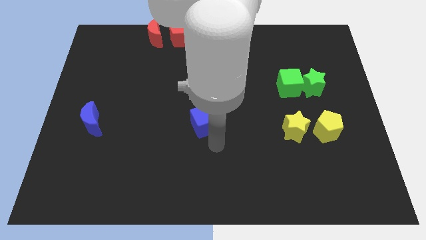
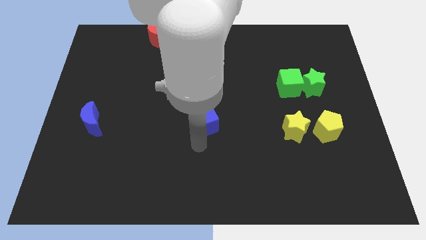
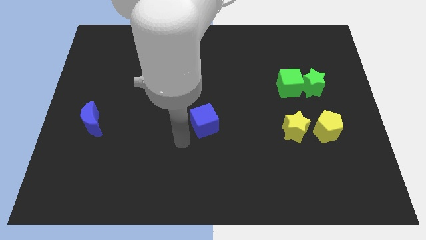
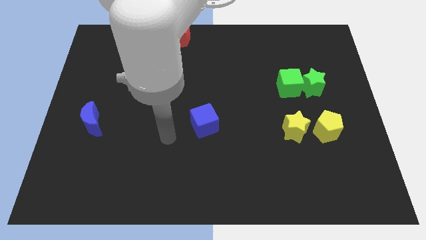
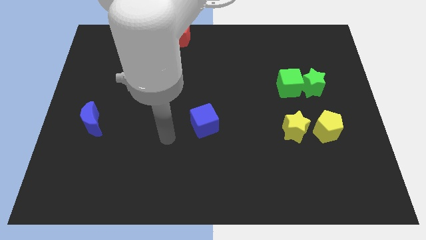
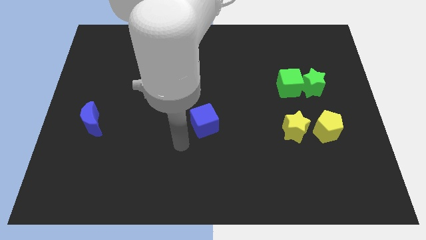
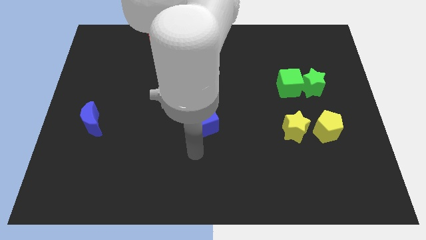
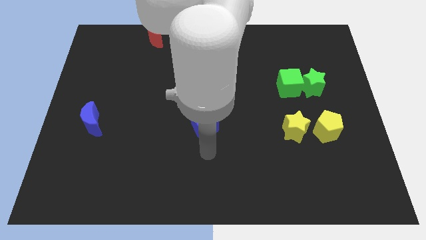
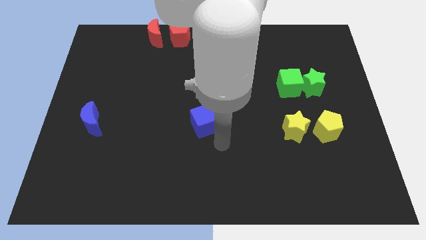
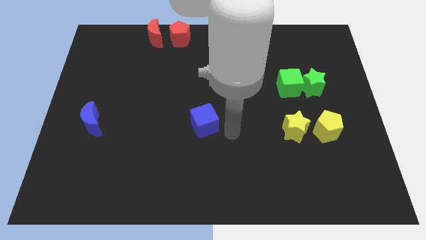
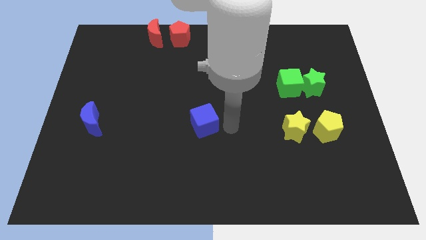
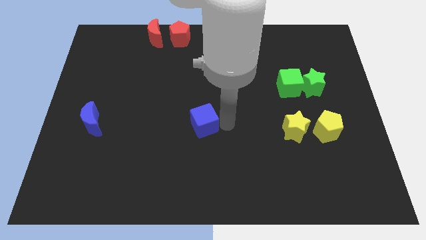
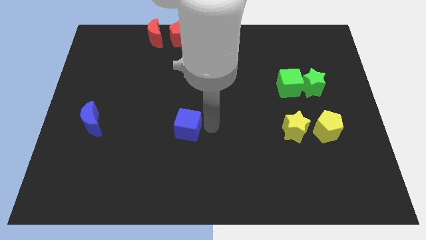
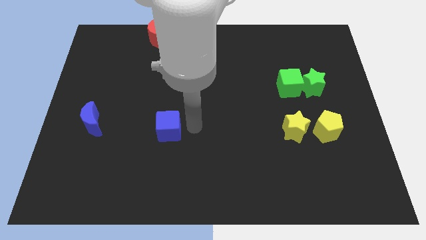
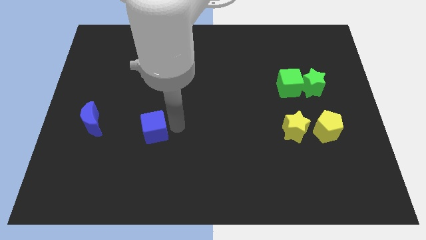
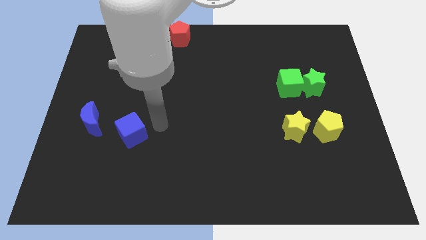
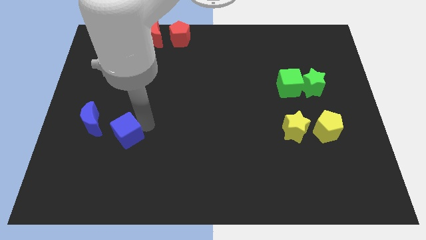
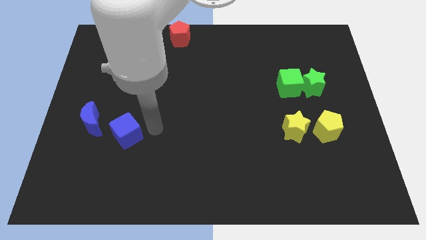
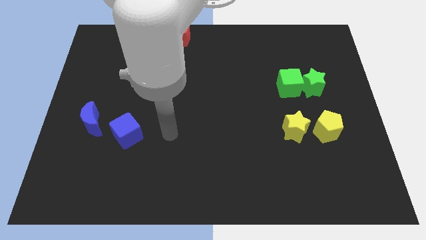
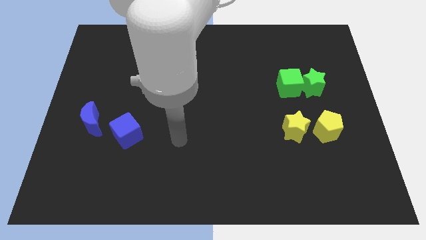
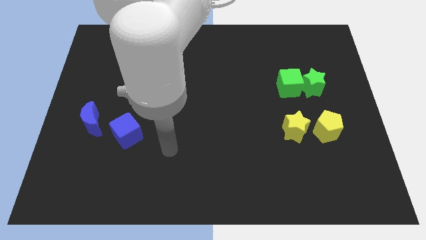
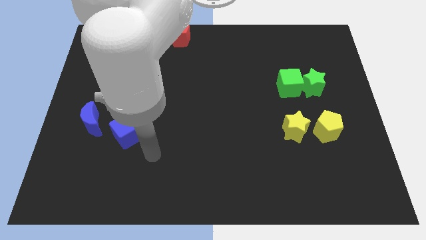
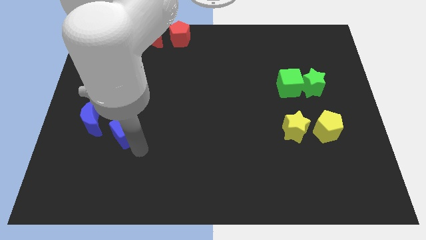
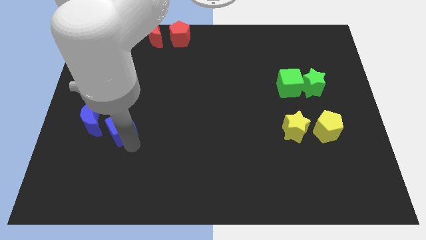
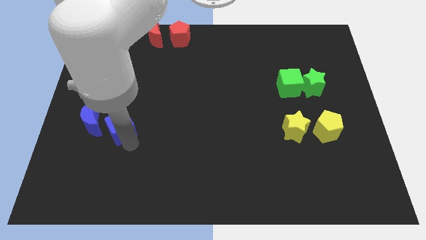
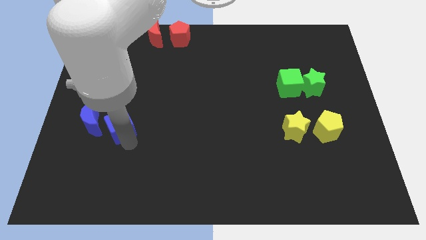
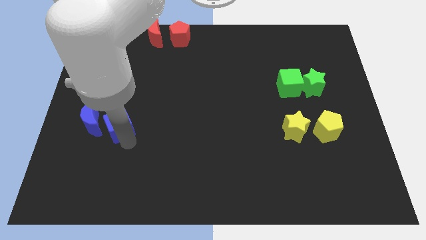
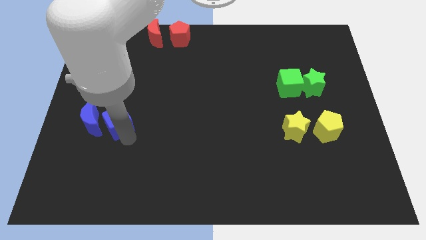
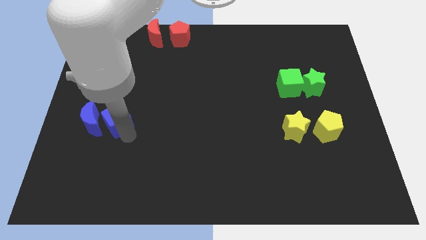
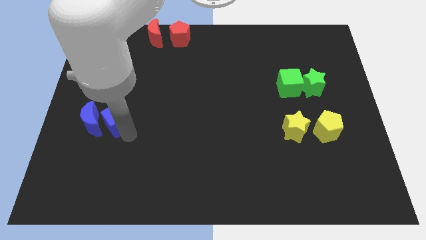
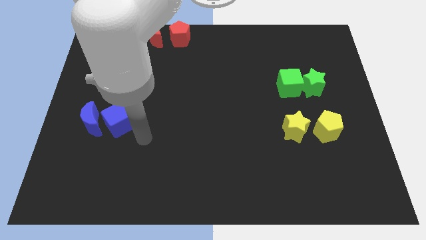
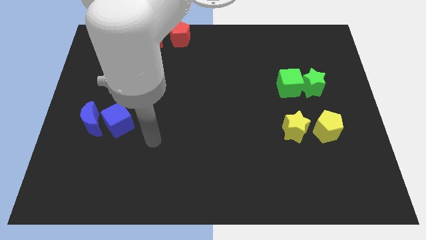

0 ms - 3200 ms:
place the blue cube to the right side of the blue crescent

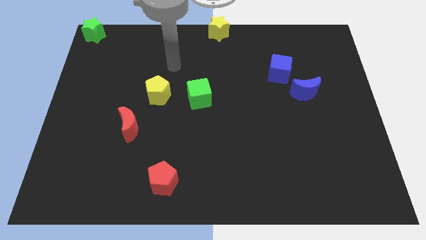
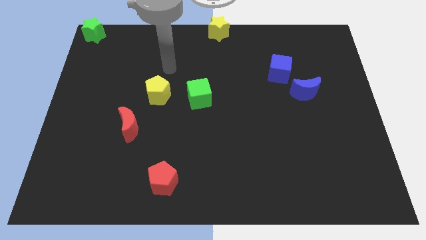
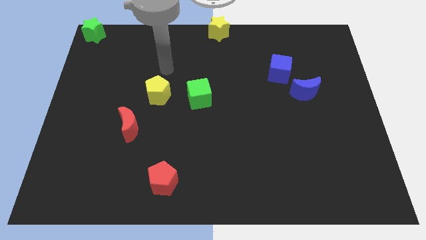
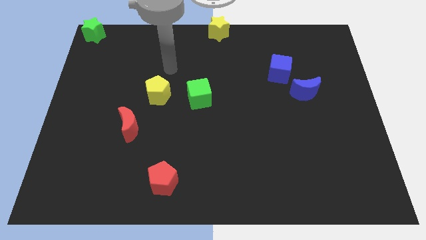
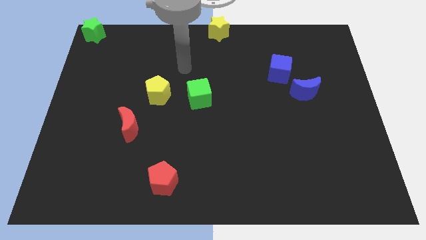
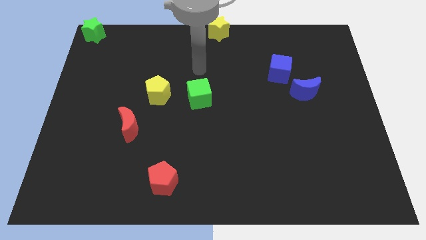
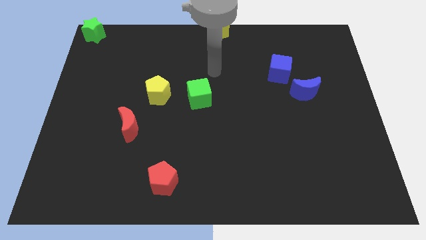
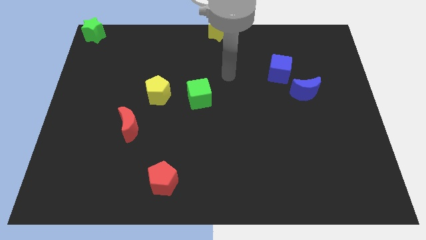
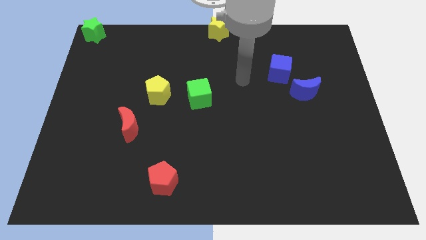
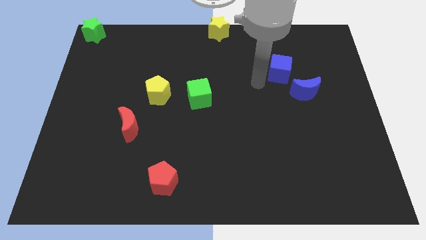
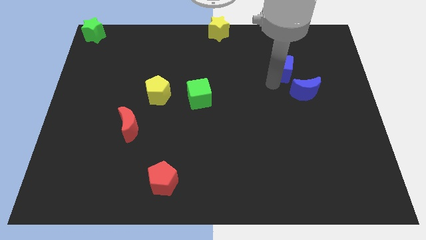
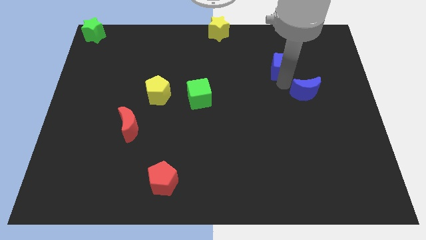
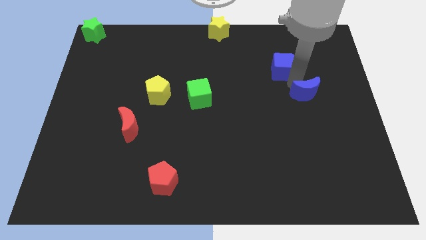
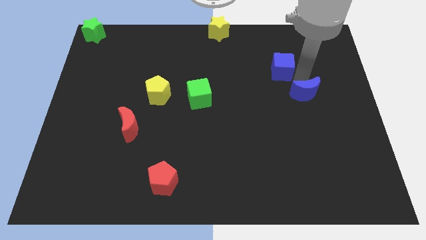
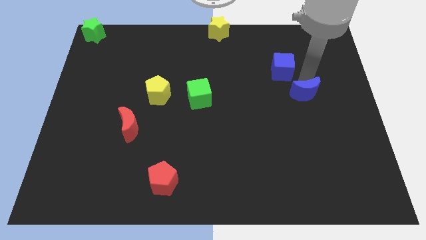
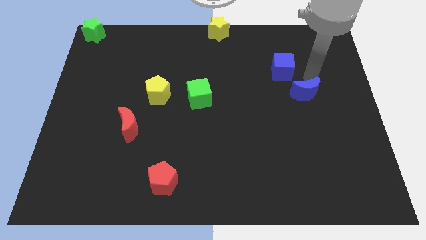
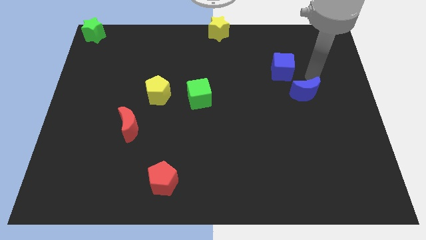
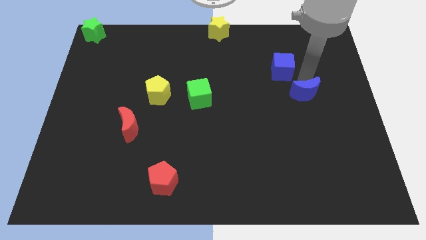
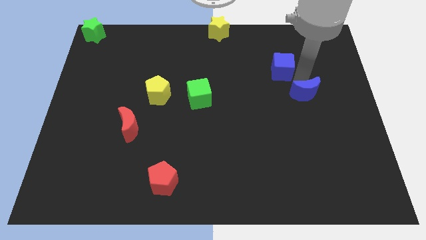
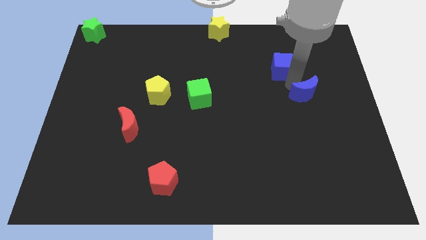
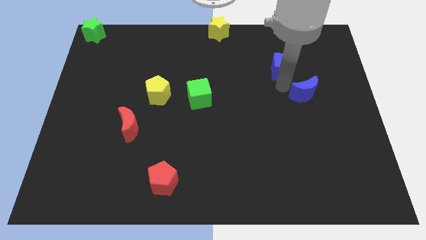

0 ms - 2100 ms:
push the arm in between the blue blocks

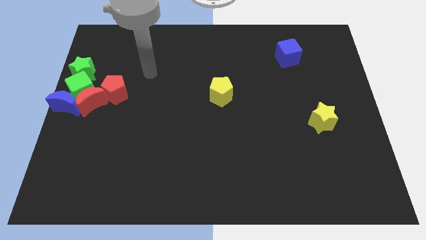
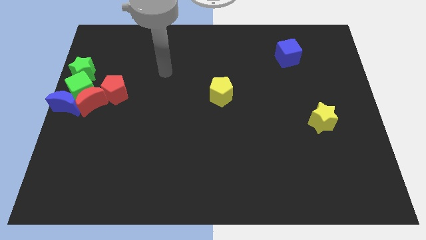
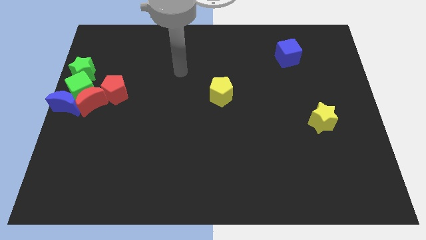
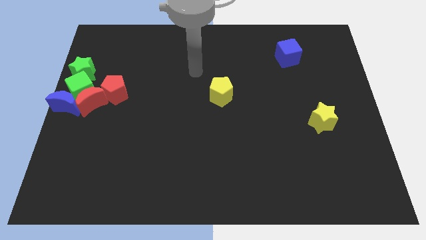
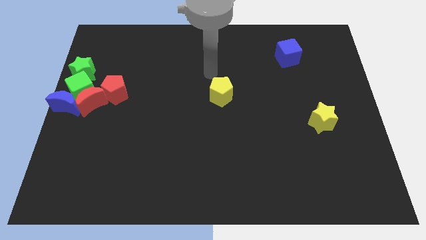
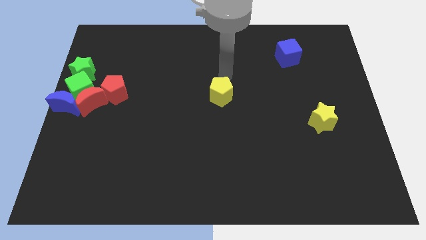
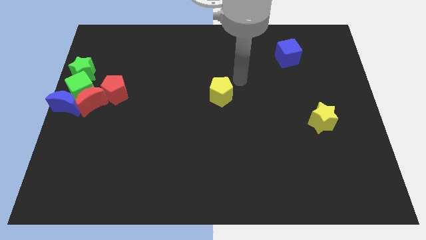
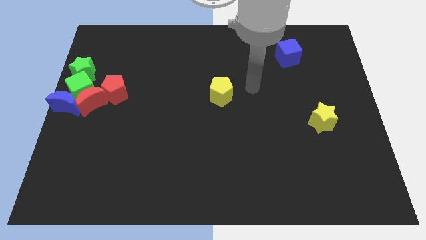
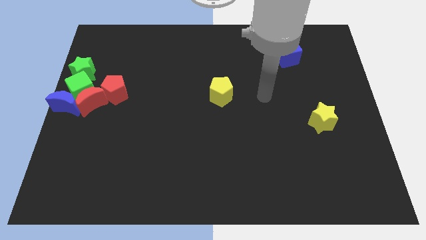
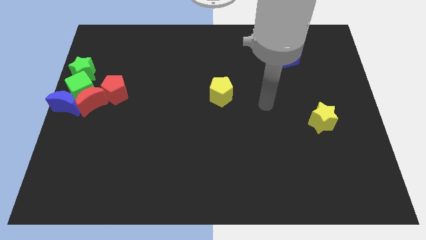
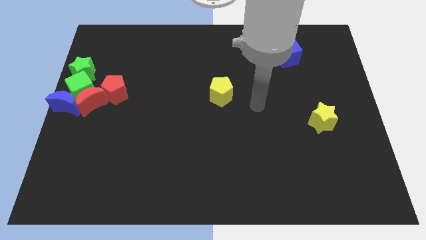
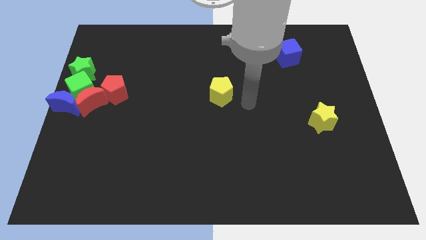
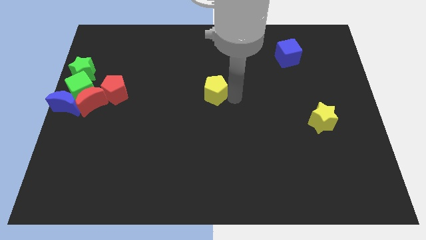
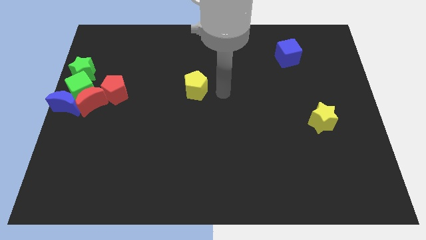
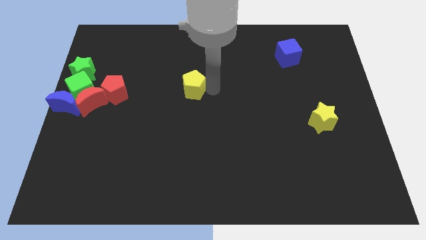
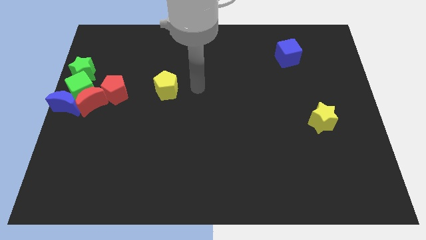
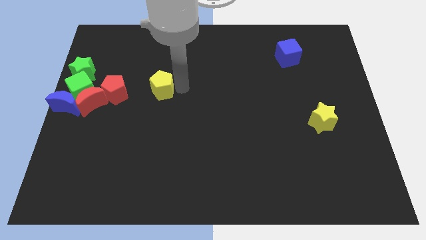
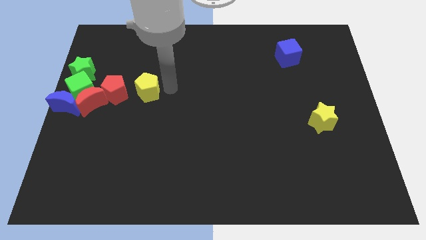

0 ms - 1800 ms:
move the yellow pentagon to the right of red pentagon

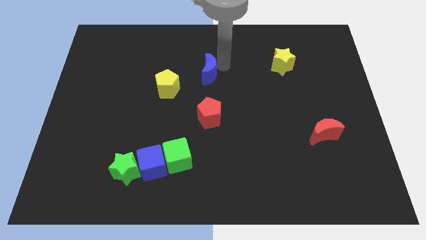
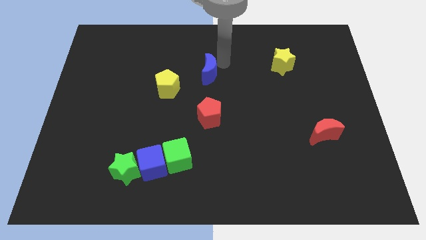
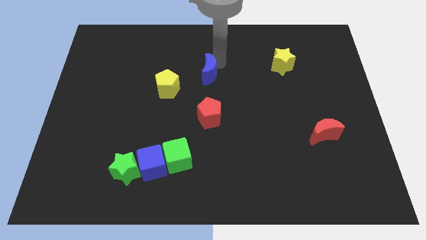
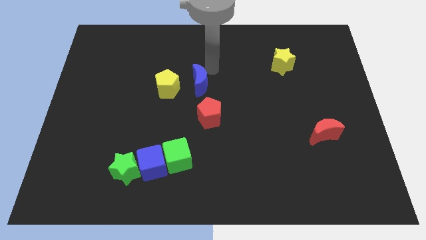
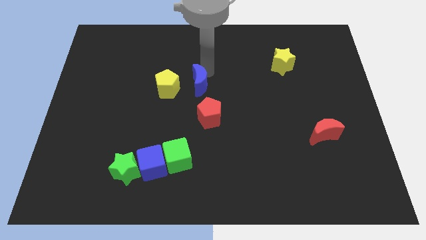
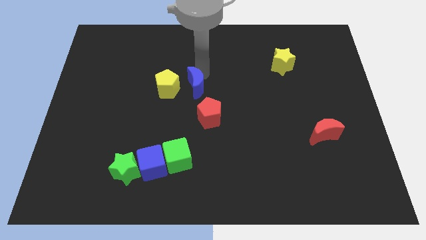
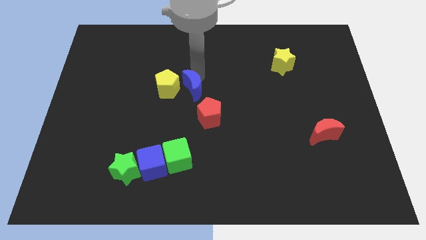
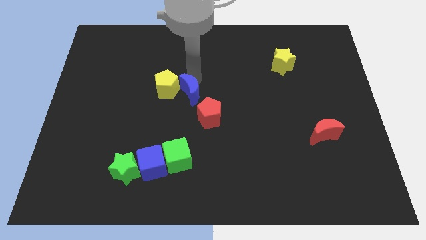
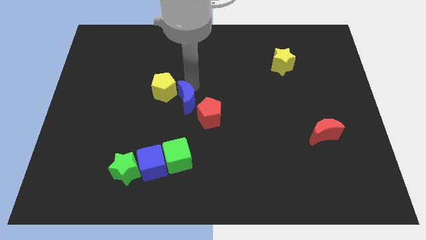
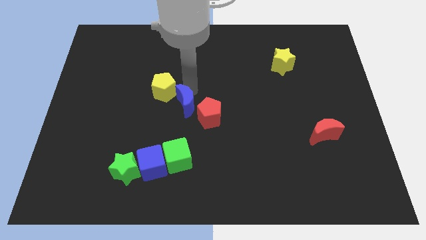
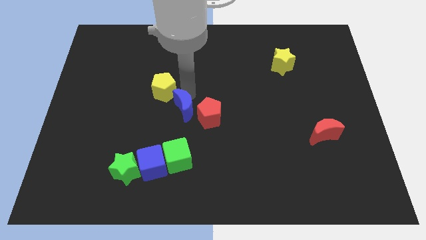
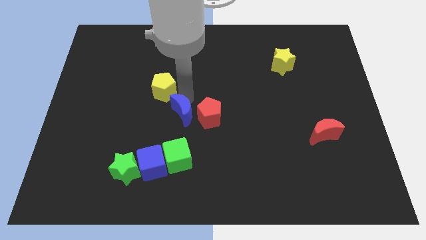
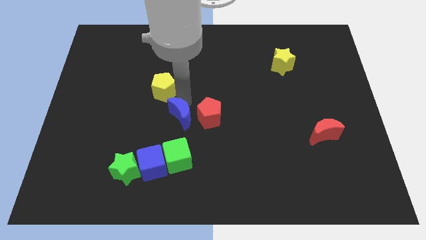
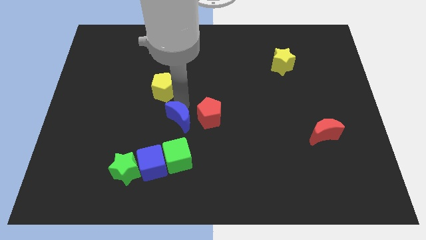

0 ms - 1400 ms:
place blue moon adjacent to red pentagon

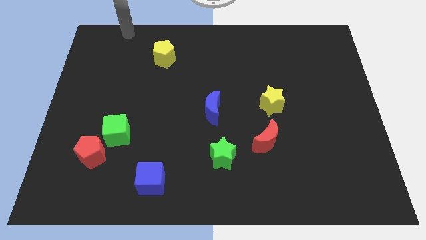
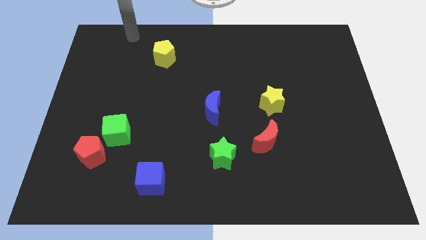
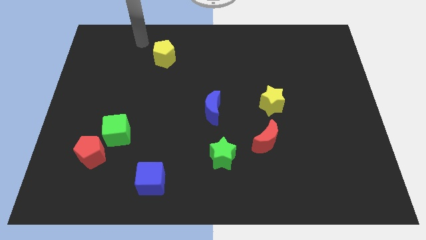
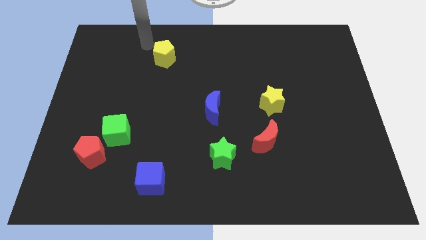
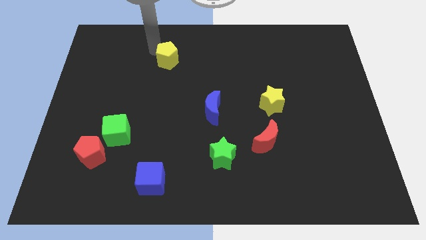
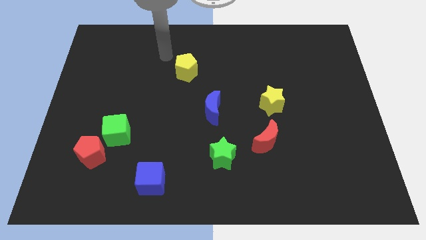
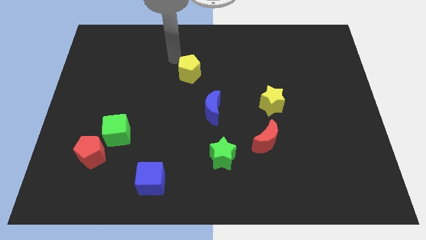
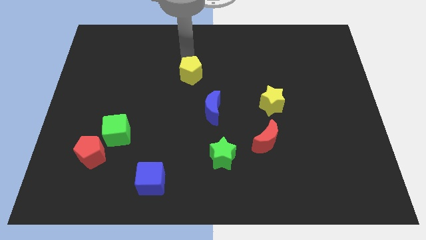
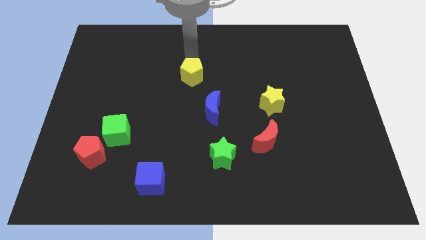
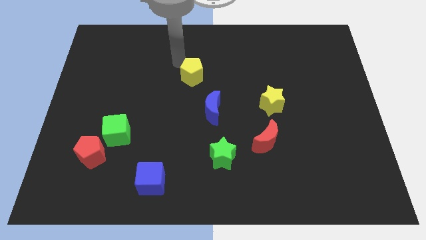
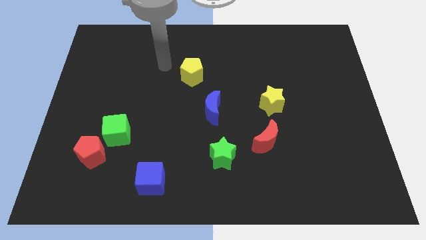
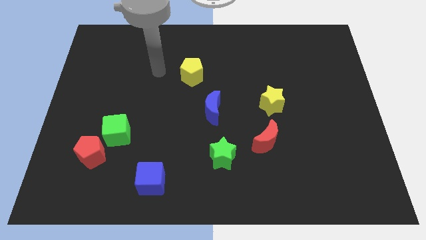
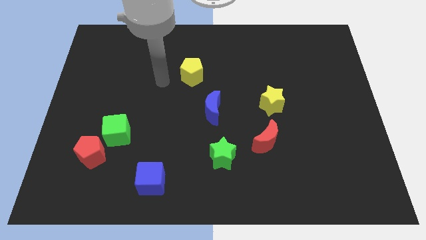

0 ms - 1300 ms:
push the yellow pentagon towards the blue moon
